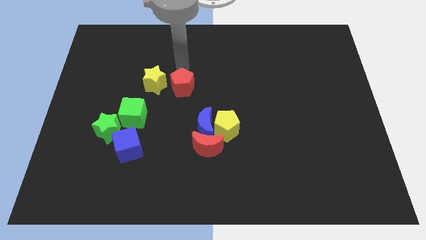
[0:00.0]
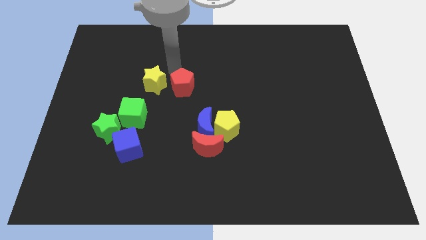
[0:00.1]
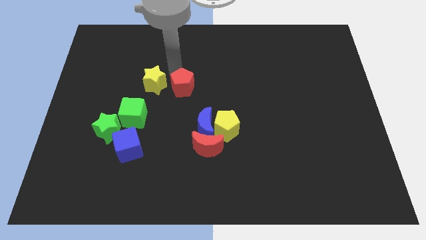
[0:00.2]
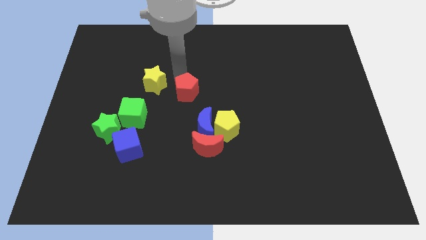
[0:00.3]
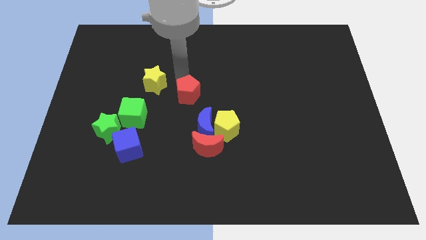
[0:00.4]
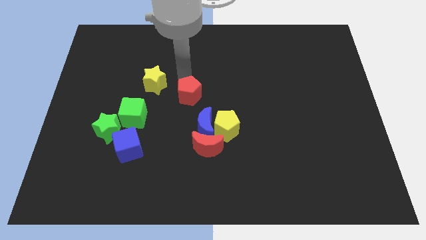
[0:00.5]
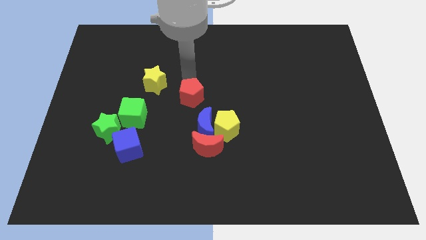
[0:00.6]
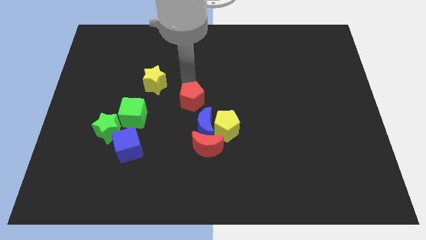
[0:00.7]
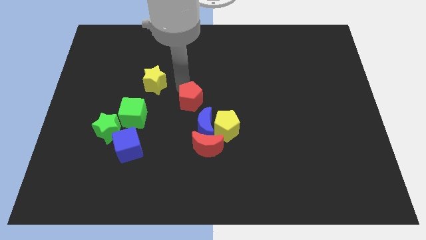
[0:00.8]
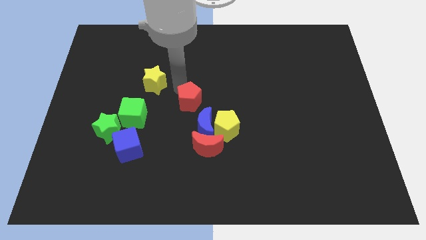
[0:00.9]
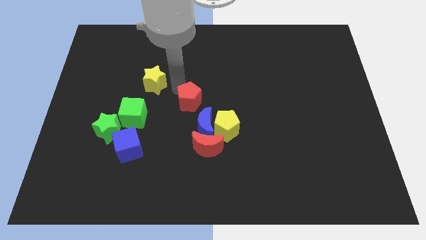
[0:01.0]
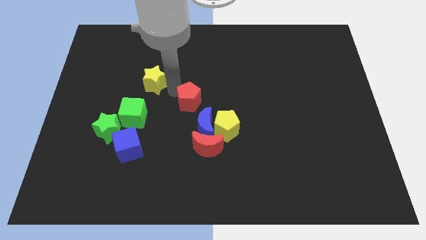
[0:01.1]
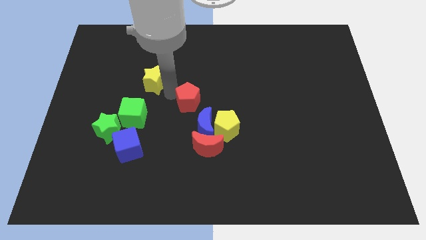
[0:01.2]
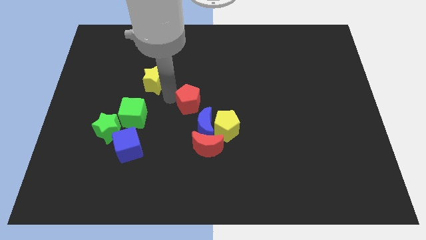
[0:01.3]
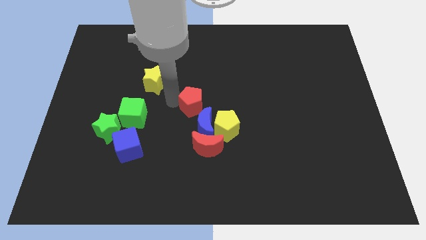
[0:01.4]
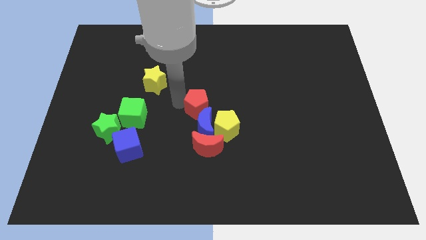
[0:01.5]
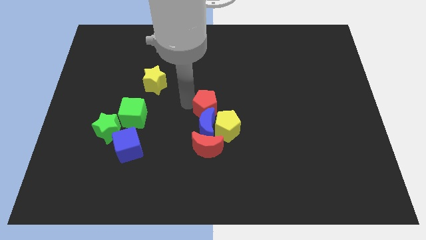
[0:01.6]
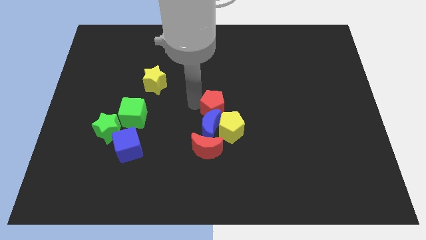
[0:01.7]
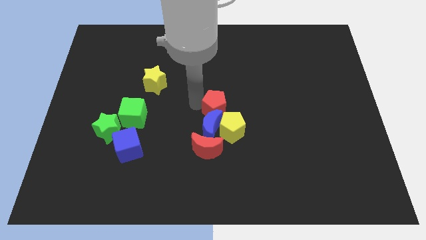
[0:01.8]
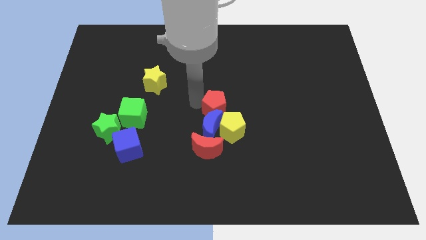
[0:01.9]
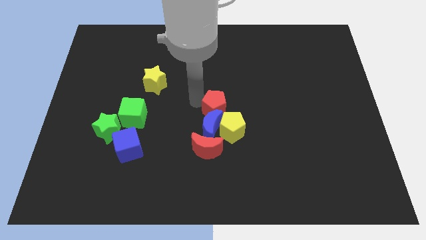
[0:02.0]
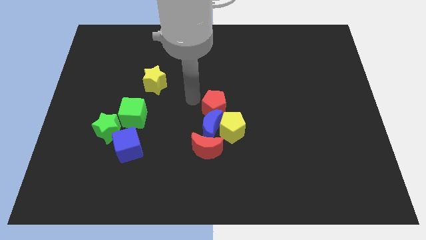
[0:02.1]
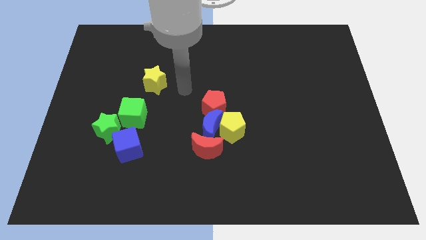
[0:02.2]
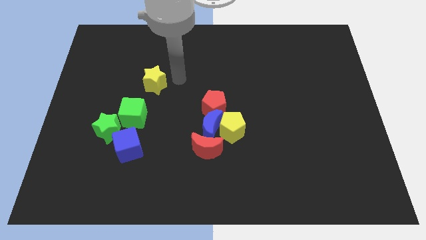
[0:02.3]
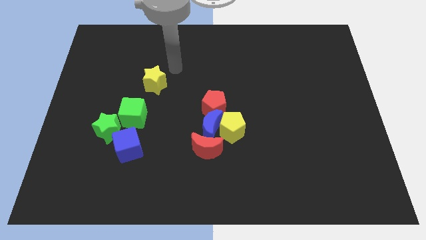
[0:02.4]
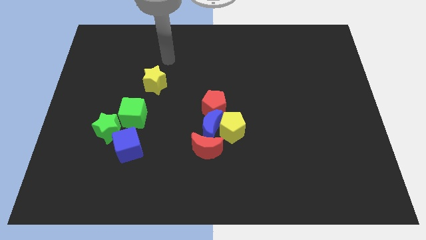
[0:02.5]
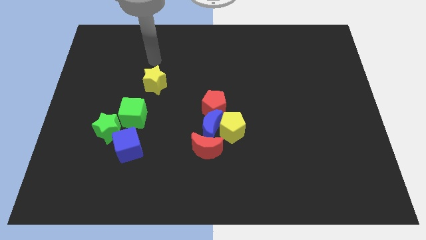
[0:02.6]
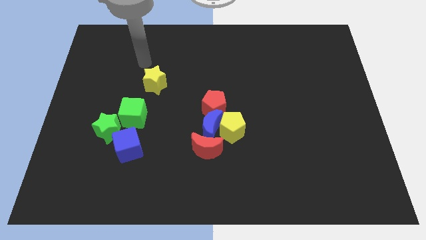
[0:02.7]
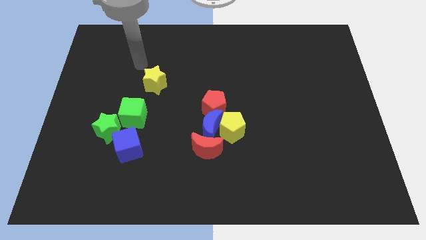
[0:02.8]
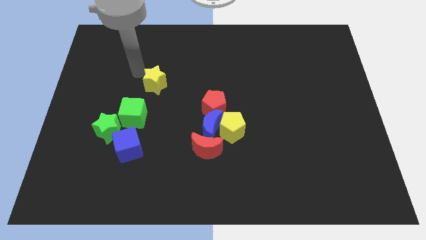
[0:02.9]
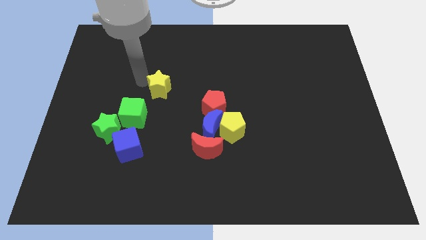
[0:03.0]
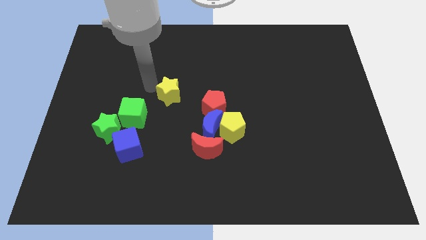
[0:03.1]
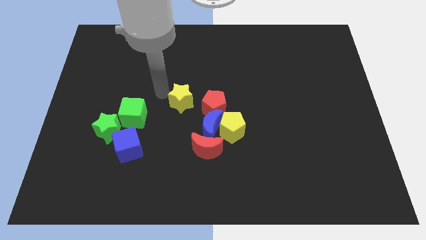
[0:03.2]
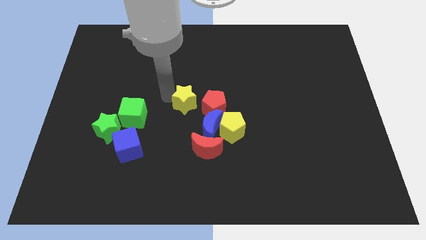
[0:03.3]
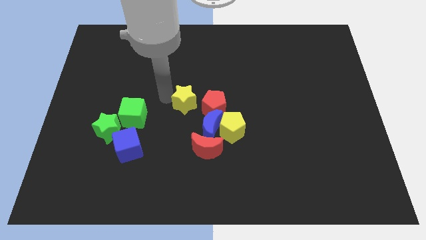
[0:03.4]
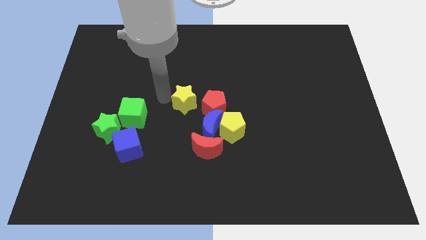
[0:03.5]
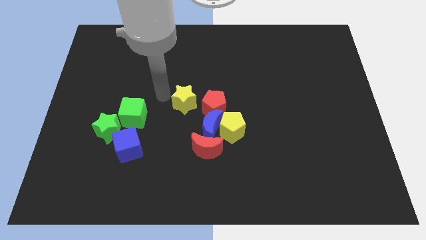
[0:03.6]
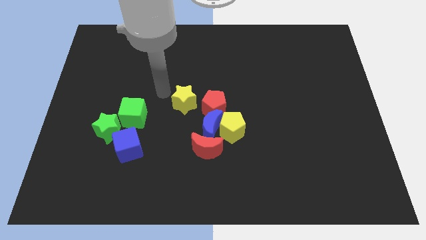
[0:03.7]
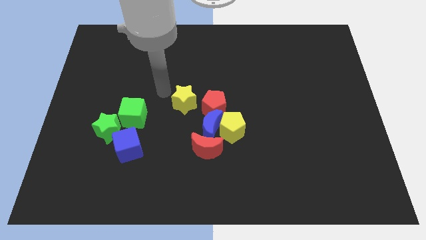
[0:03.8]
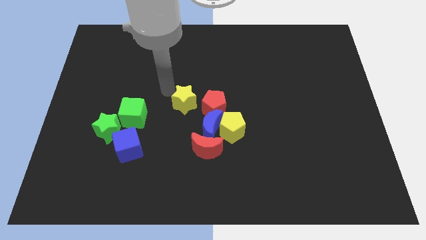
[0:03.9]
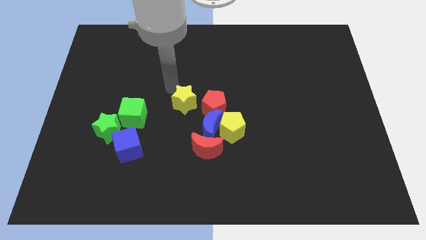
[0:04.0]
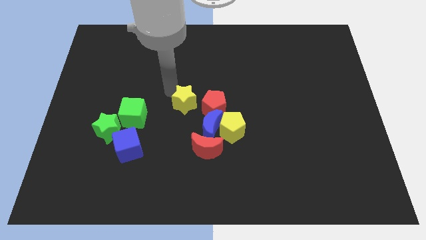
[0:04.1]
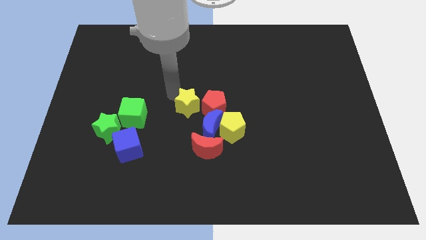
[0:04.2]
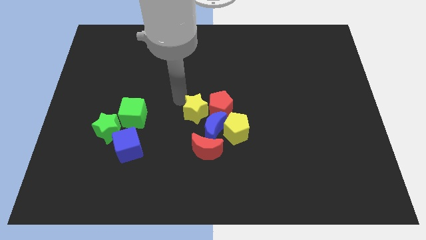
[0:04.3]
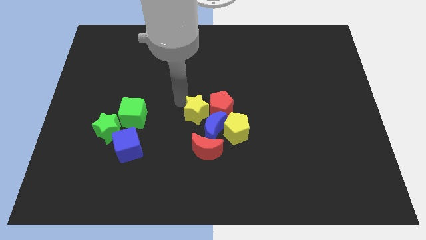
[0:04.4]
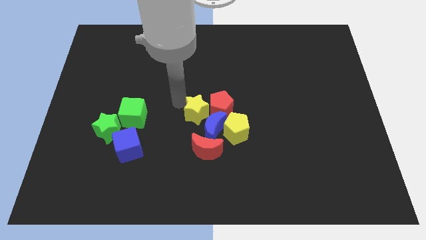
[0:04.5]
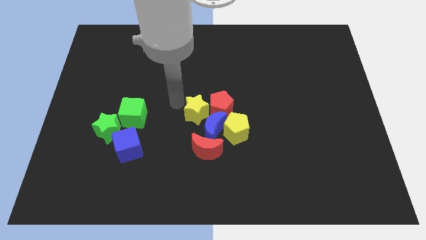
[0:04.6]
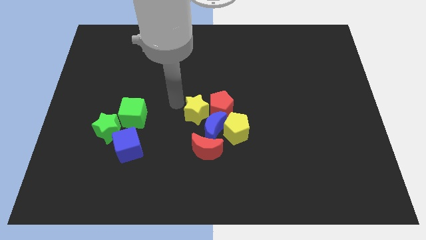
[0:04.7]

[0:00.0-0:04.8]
push the red pentagon and yellow star into the group of blocks

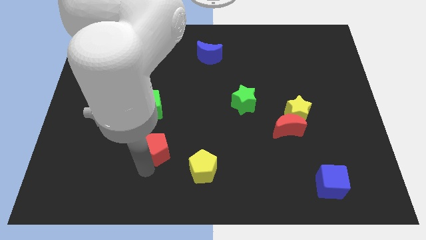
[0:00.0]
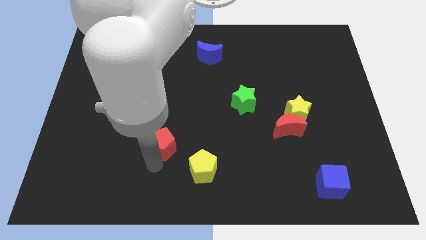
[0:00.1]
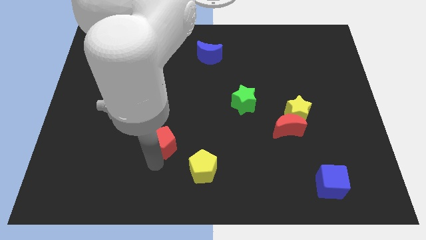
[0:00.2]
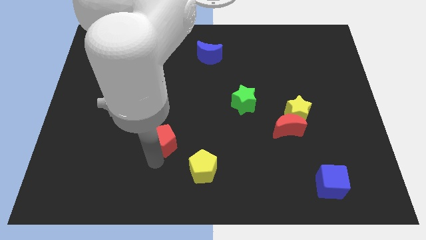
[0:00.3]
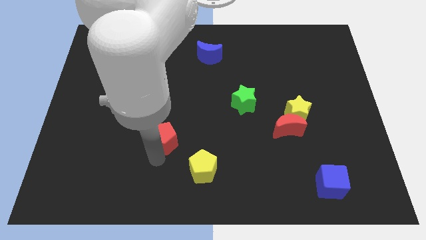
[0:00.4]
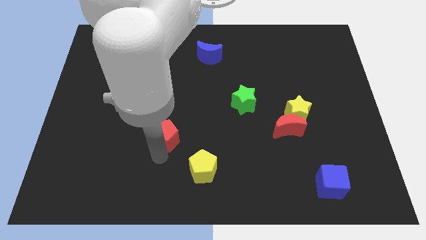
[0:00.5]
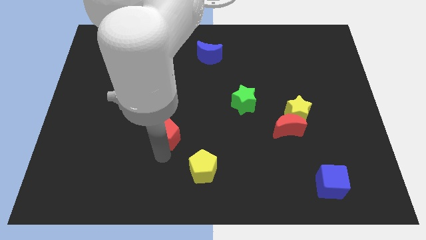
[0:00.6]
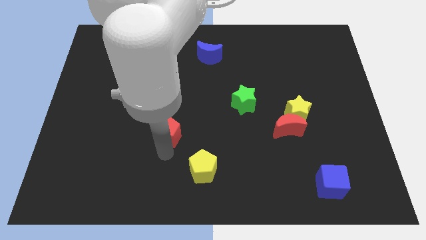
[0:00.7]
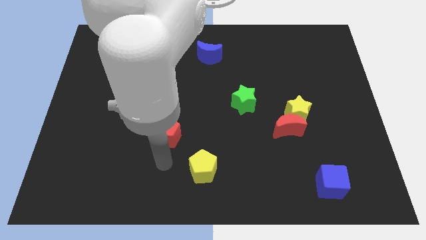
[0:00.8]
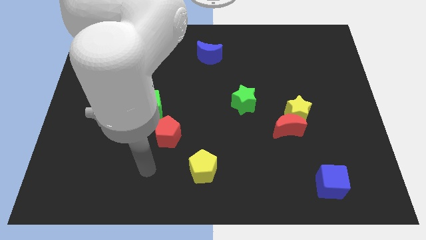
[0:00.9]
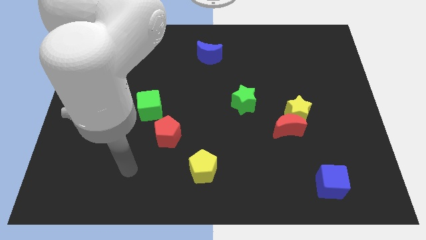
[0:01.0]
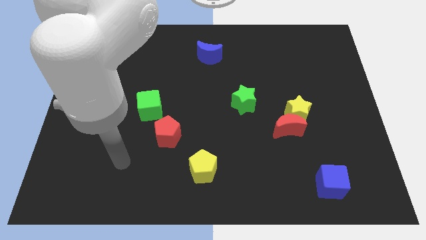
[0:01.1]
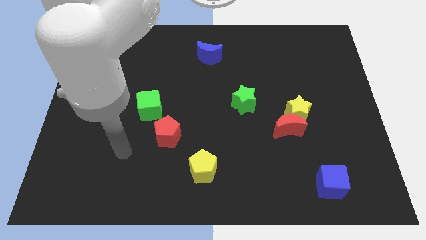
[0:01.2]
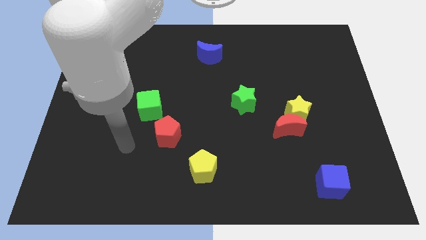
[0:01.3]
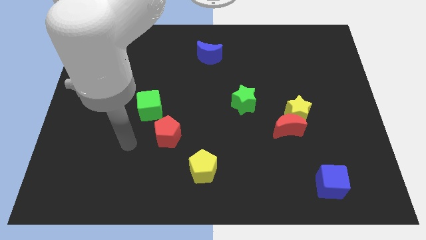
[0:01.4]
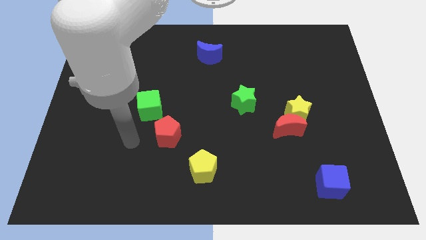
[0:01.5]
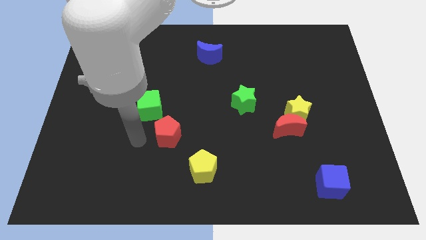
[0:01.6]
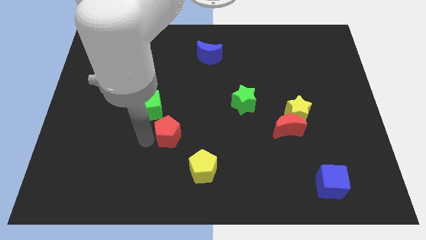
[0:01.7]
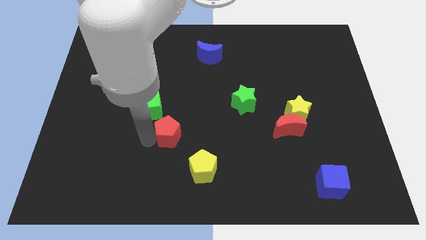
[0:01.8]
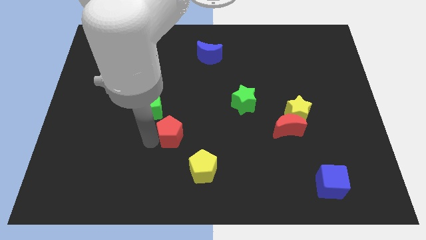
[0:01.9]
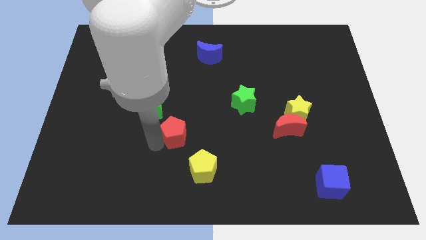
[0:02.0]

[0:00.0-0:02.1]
push the red pentagon in between the yellow pentagon and green cube

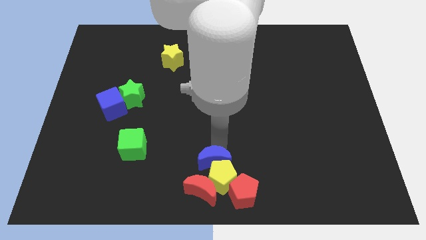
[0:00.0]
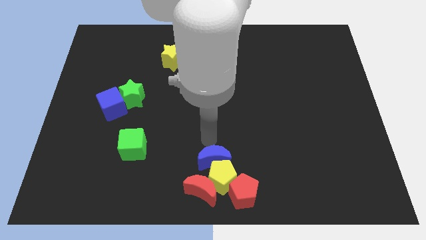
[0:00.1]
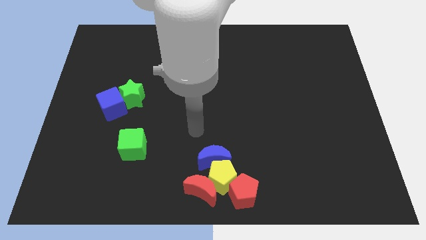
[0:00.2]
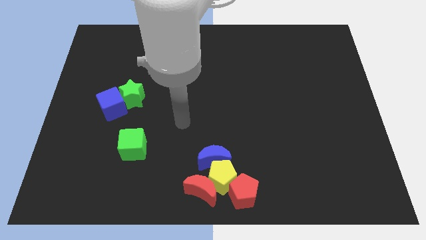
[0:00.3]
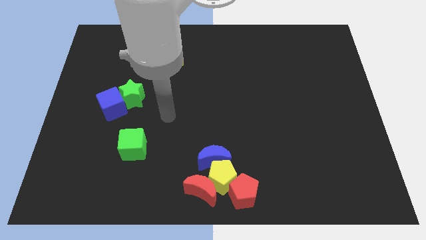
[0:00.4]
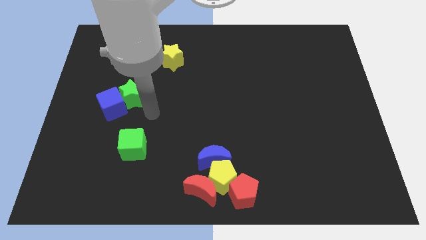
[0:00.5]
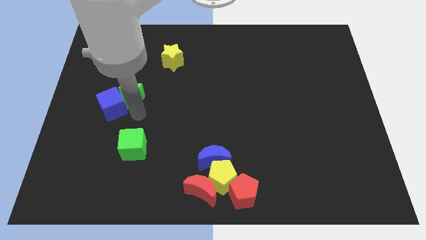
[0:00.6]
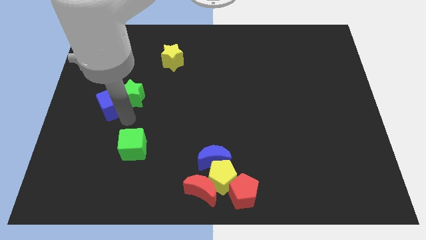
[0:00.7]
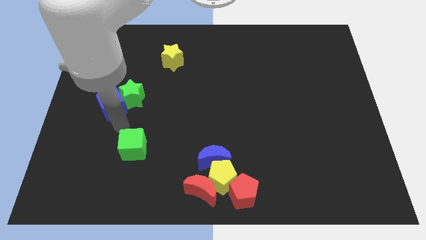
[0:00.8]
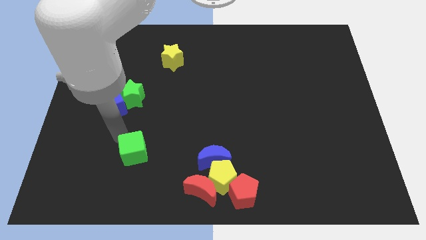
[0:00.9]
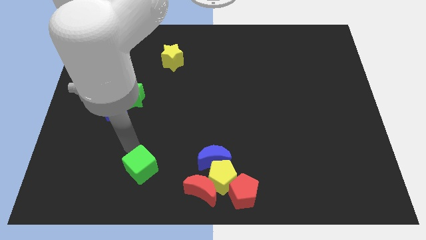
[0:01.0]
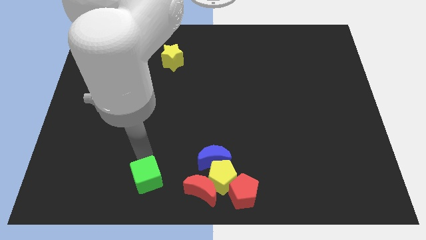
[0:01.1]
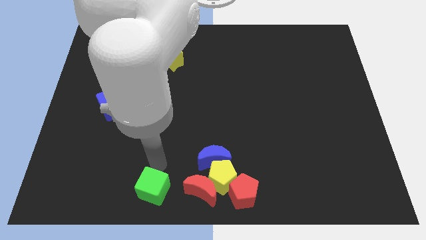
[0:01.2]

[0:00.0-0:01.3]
move the green cube to the left of the red crescent

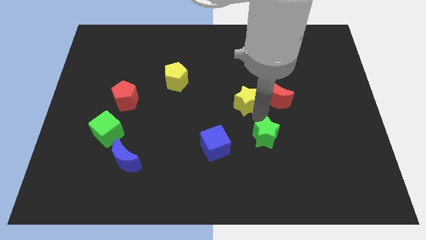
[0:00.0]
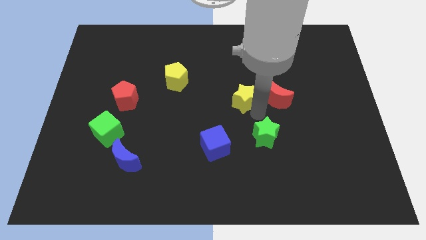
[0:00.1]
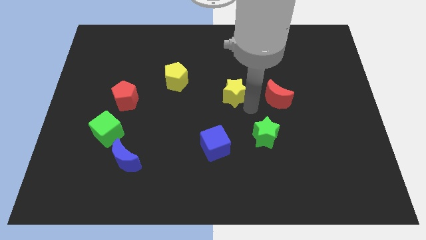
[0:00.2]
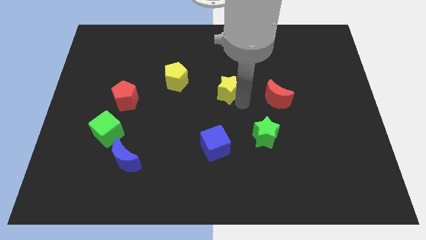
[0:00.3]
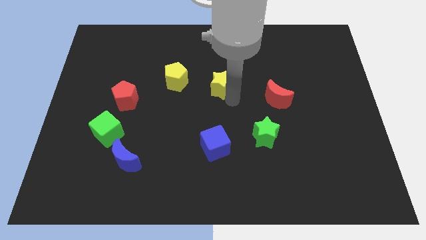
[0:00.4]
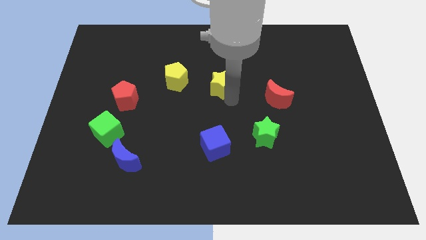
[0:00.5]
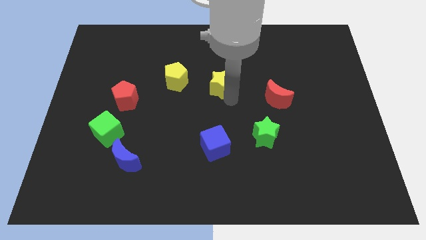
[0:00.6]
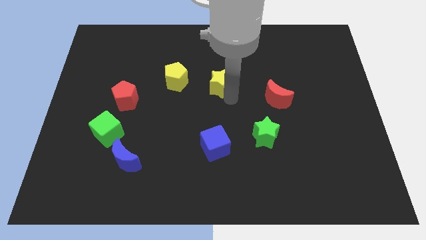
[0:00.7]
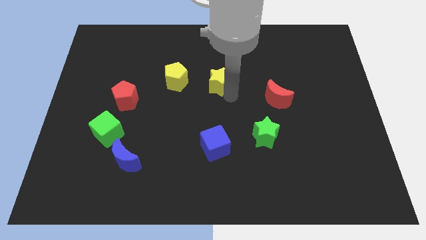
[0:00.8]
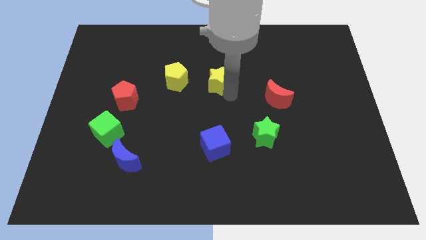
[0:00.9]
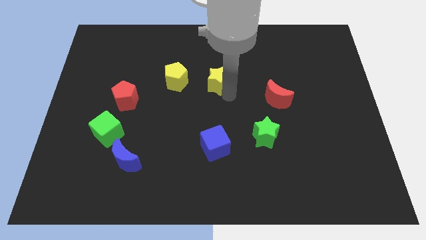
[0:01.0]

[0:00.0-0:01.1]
place yellow star to right of yellow pentagon
